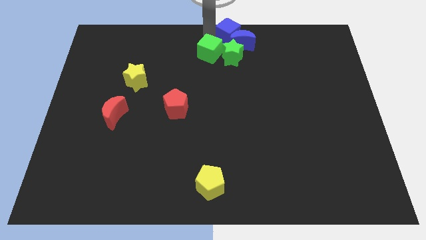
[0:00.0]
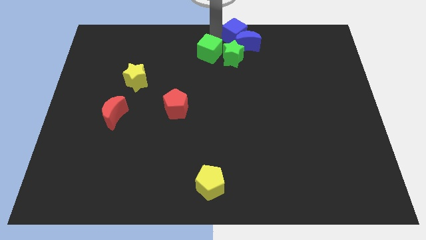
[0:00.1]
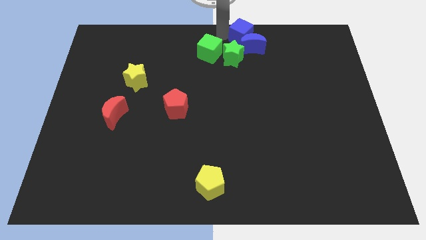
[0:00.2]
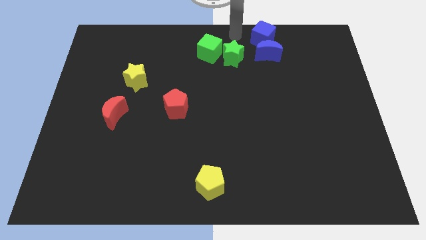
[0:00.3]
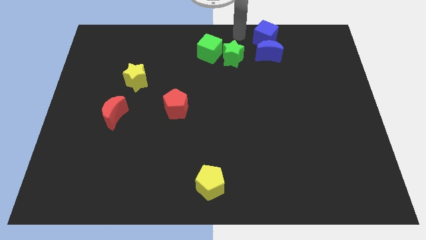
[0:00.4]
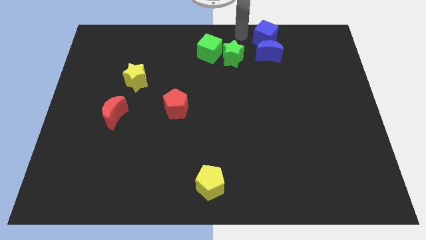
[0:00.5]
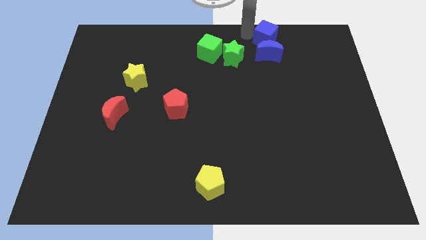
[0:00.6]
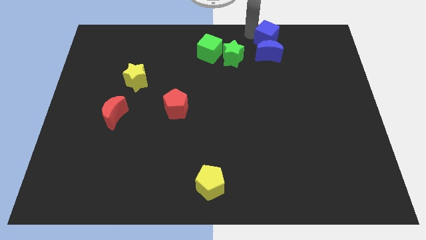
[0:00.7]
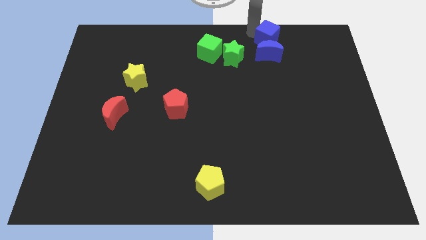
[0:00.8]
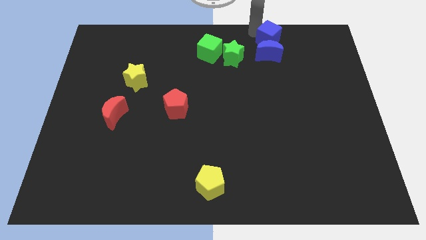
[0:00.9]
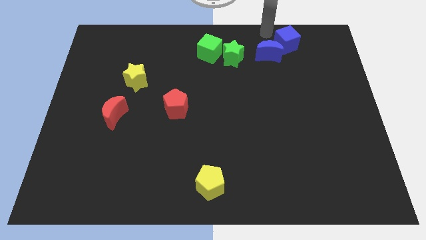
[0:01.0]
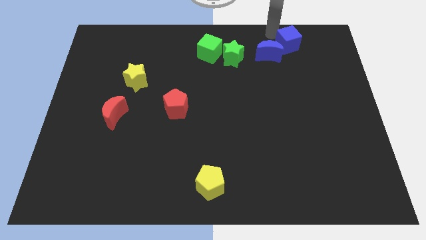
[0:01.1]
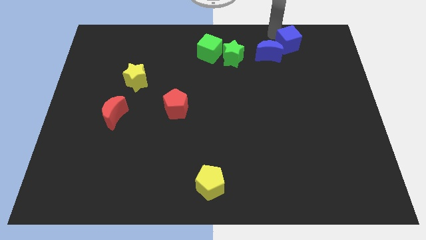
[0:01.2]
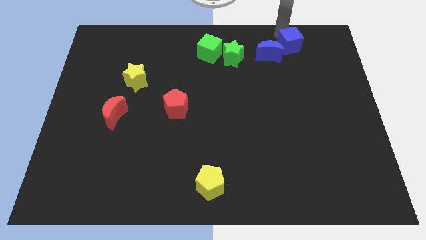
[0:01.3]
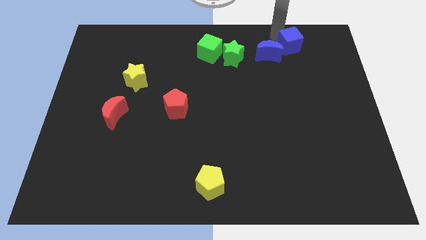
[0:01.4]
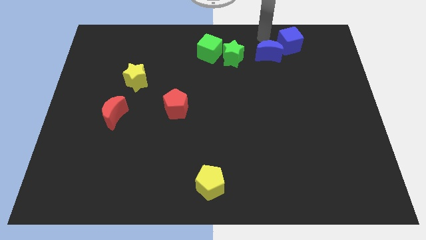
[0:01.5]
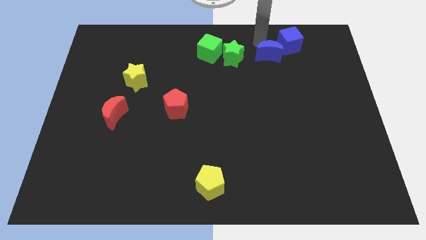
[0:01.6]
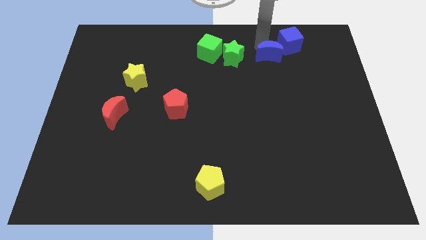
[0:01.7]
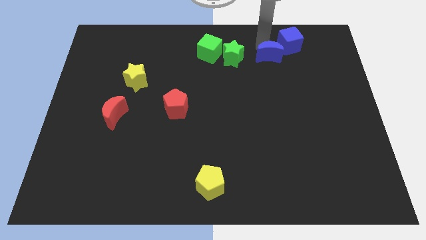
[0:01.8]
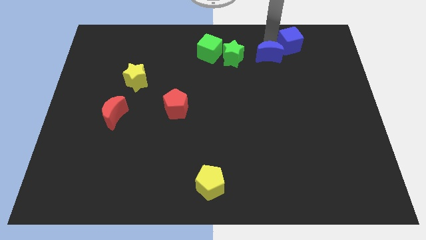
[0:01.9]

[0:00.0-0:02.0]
separate blue blocks from green blocks

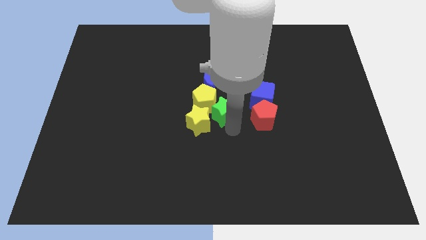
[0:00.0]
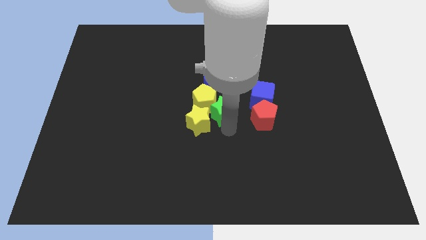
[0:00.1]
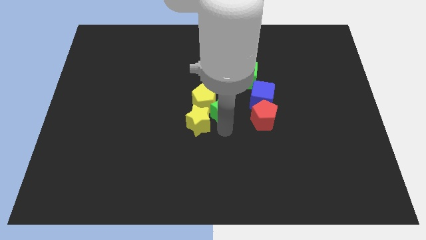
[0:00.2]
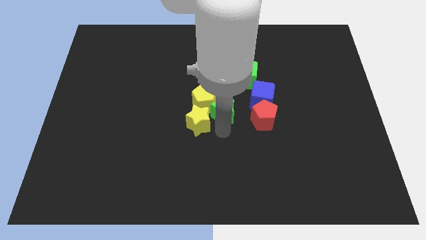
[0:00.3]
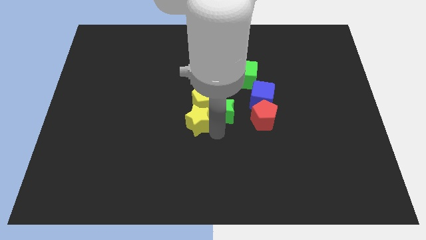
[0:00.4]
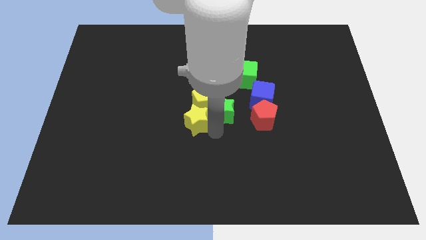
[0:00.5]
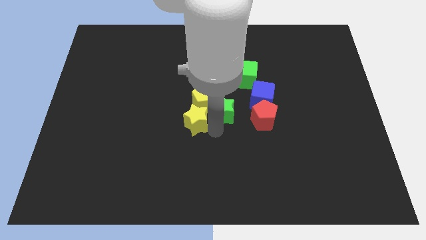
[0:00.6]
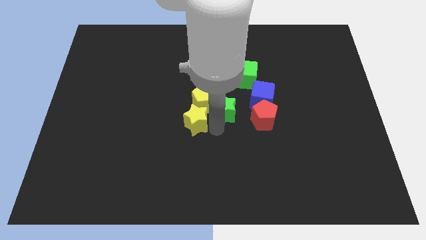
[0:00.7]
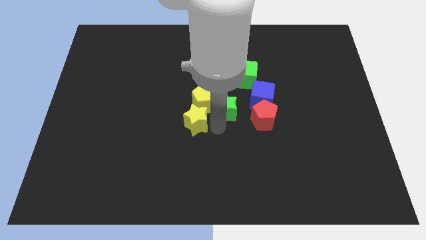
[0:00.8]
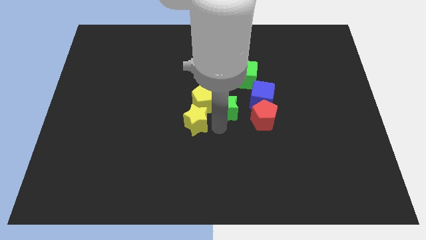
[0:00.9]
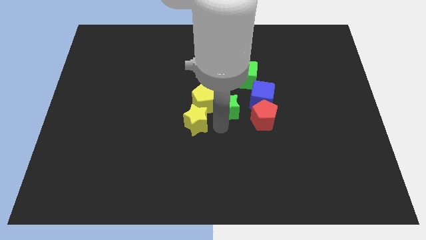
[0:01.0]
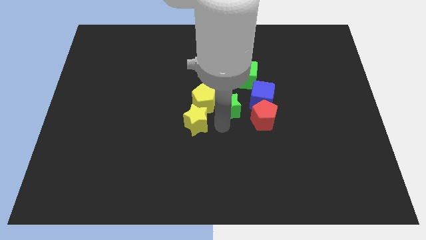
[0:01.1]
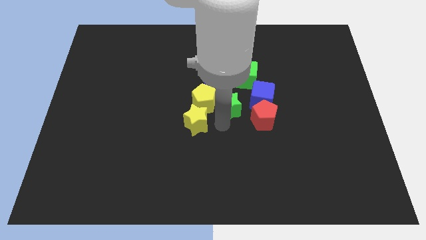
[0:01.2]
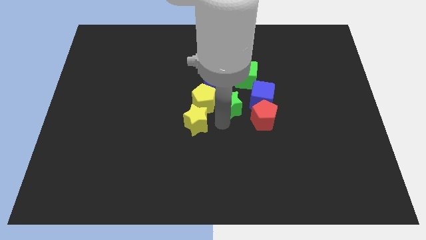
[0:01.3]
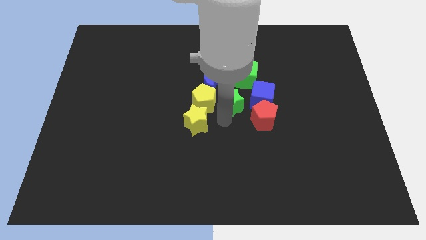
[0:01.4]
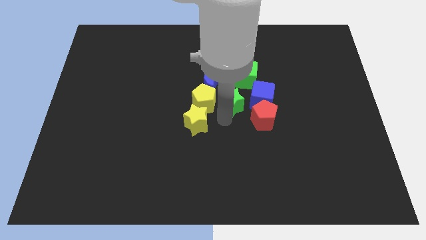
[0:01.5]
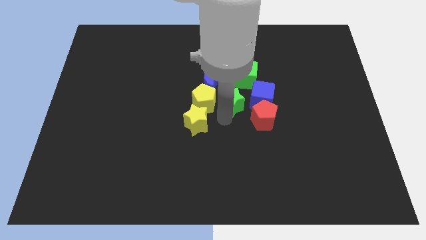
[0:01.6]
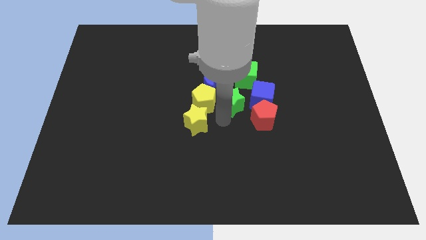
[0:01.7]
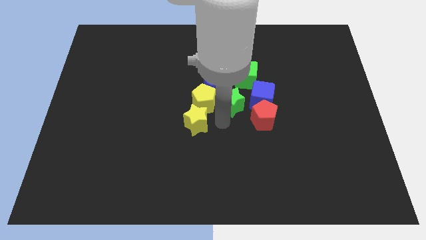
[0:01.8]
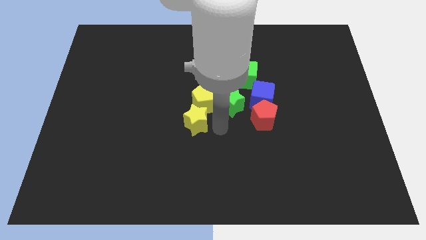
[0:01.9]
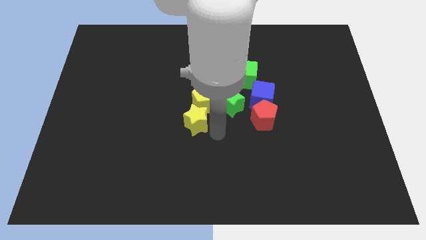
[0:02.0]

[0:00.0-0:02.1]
place the green star right to the yellow pentagon

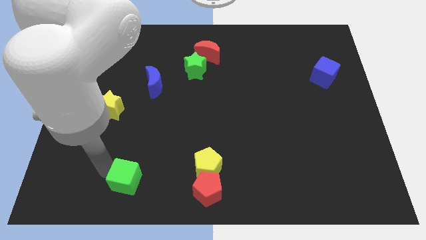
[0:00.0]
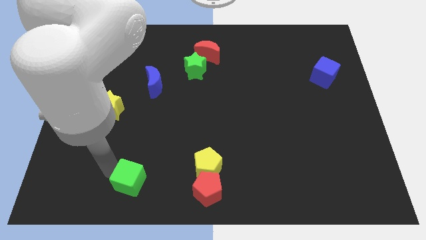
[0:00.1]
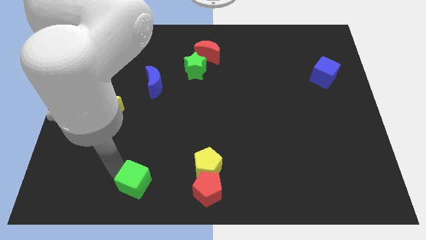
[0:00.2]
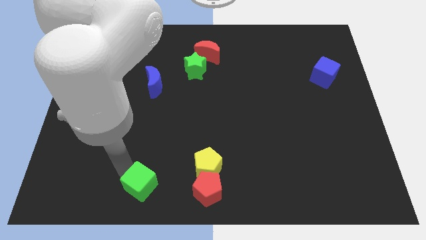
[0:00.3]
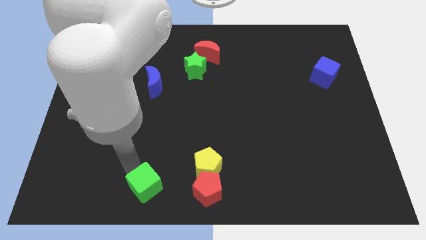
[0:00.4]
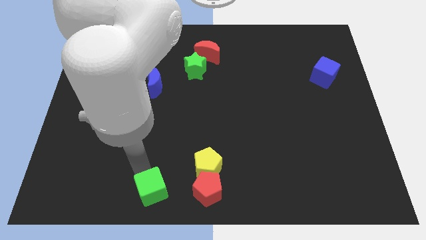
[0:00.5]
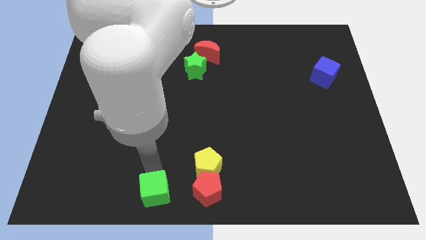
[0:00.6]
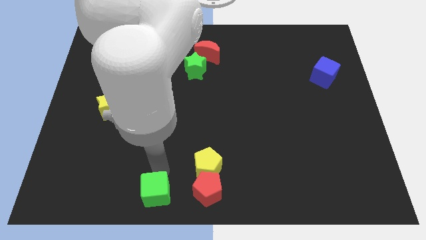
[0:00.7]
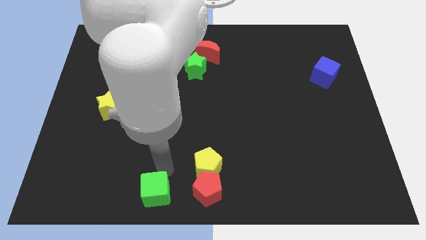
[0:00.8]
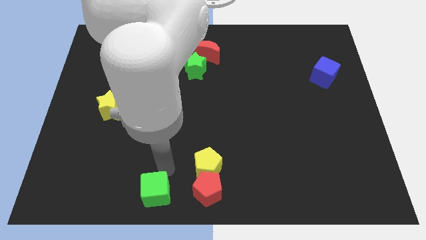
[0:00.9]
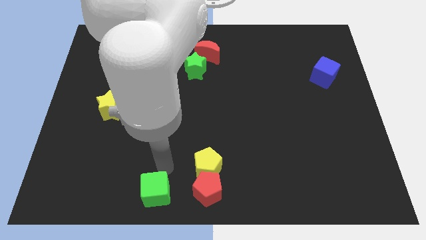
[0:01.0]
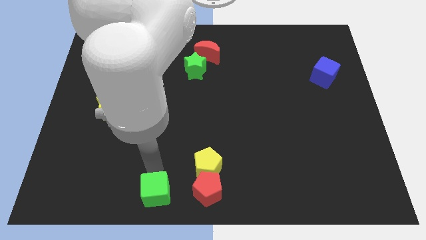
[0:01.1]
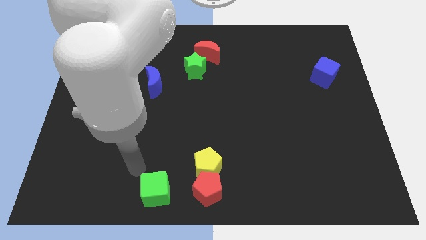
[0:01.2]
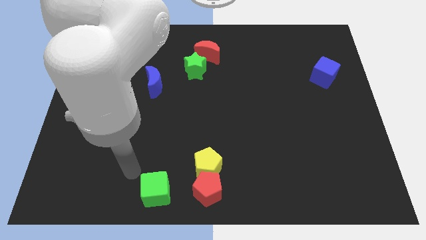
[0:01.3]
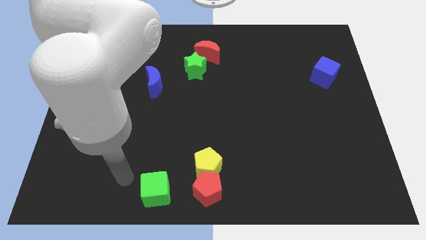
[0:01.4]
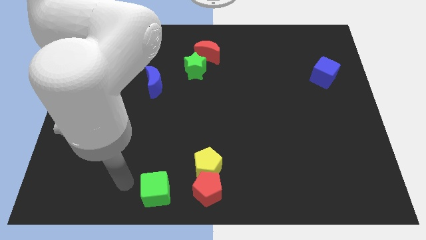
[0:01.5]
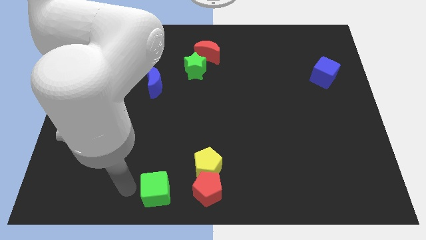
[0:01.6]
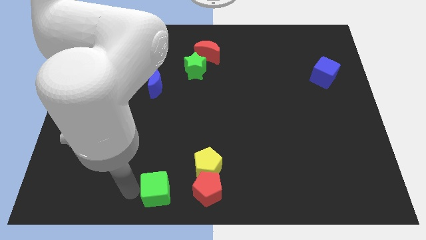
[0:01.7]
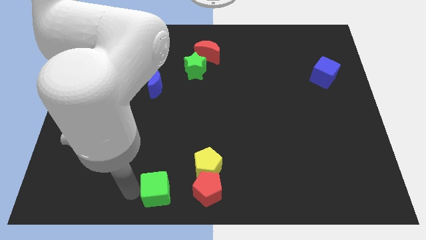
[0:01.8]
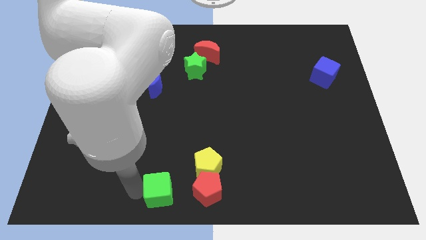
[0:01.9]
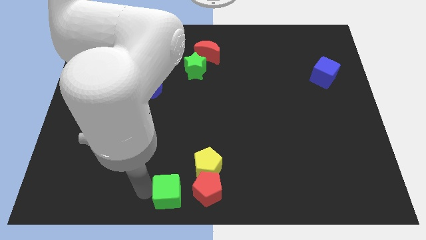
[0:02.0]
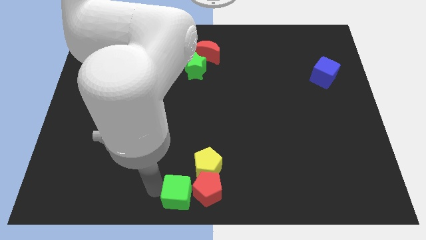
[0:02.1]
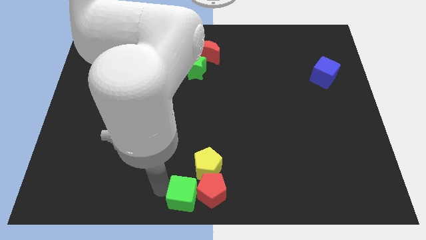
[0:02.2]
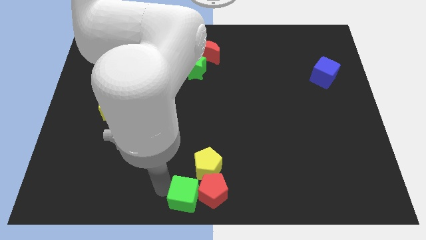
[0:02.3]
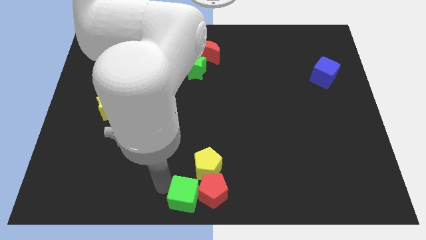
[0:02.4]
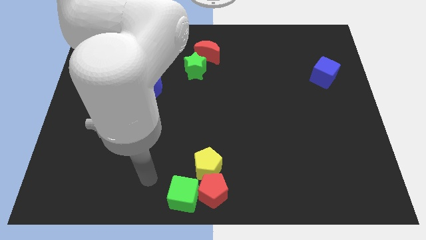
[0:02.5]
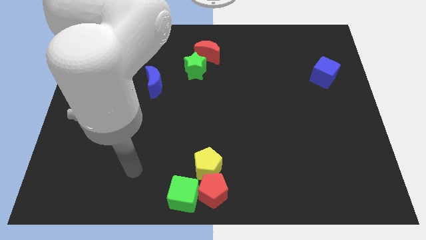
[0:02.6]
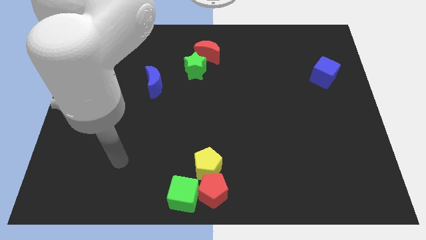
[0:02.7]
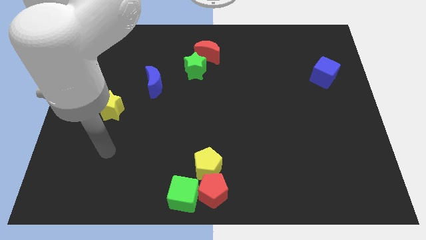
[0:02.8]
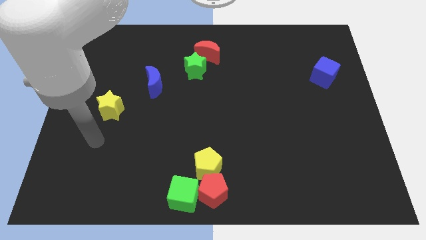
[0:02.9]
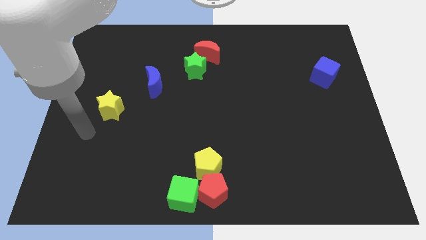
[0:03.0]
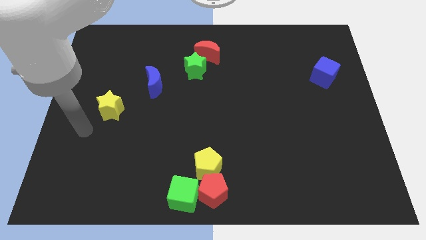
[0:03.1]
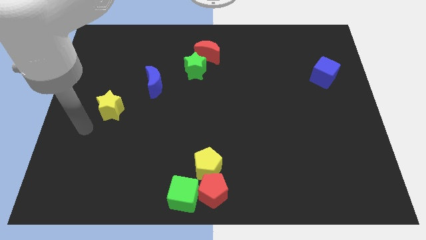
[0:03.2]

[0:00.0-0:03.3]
push the green cube into the red pentagon

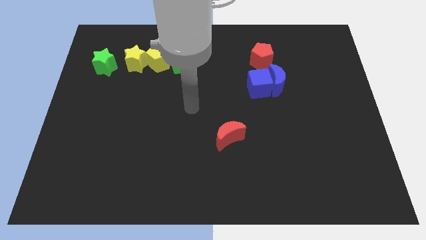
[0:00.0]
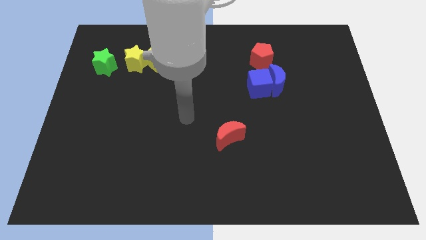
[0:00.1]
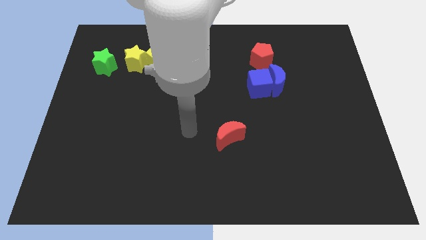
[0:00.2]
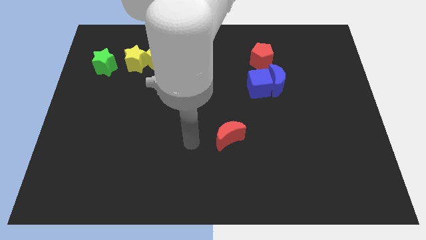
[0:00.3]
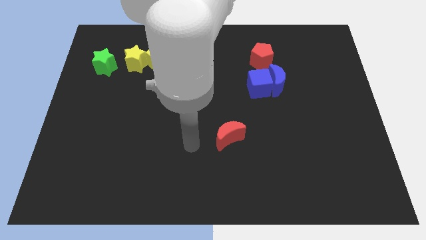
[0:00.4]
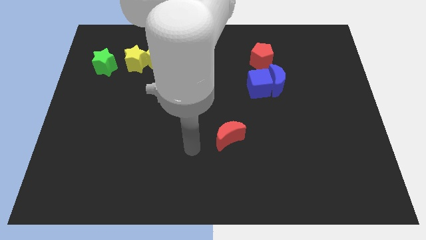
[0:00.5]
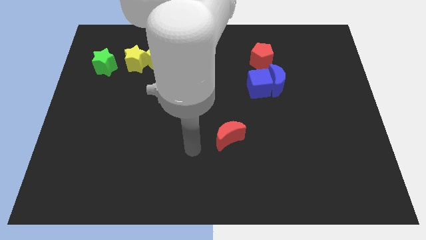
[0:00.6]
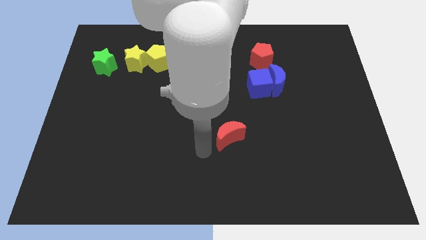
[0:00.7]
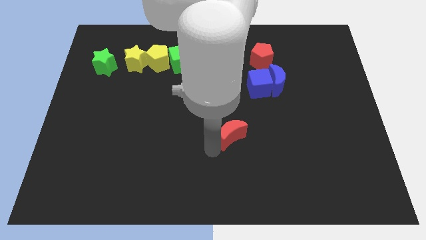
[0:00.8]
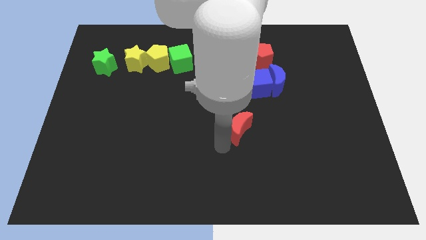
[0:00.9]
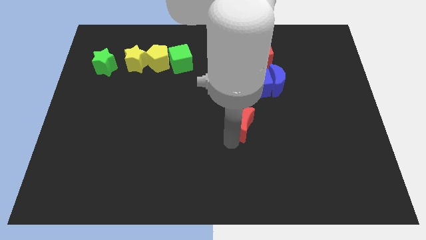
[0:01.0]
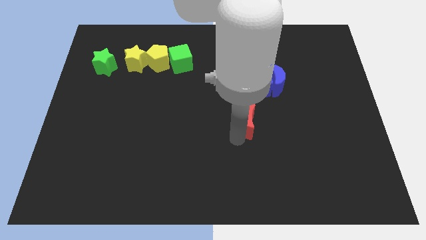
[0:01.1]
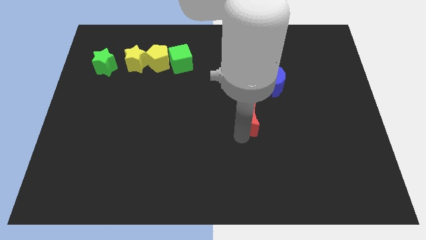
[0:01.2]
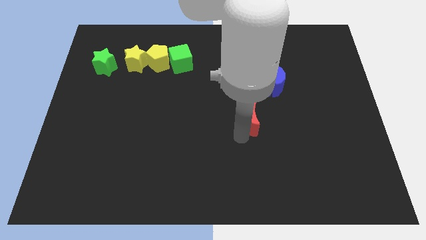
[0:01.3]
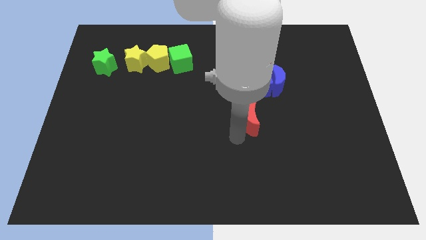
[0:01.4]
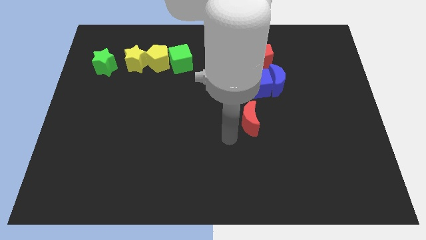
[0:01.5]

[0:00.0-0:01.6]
place red moon below the blue cube
